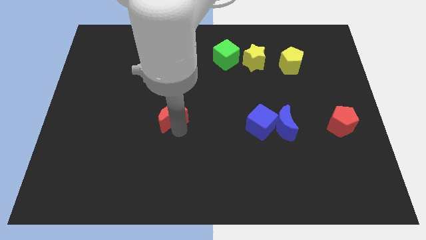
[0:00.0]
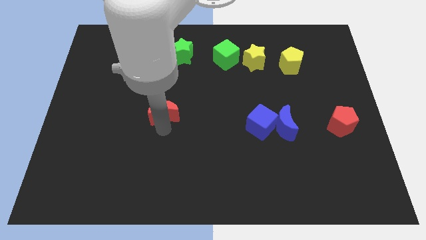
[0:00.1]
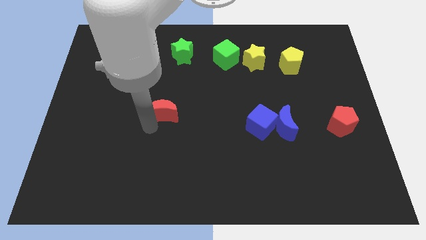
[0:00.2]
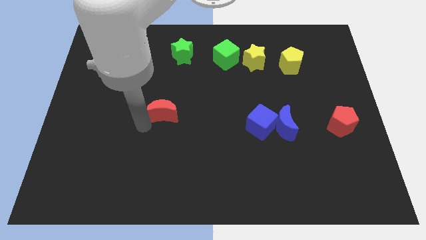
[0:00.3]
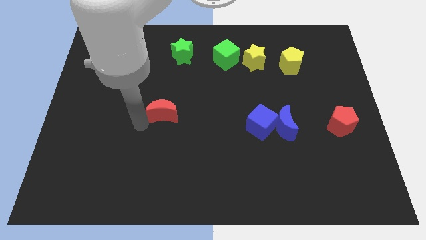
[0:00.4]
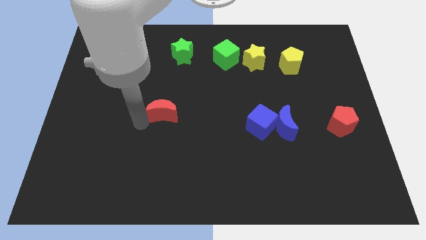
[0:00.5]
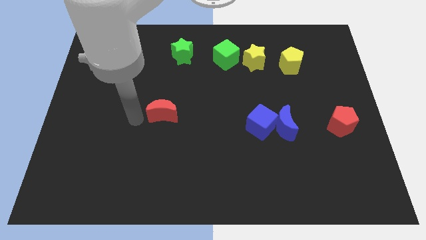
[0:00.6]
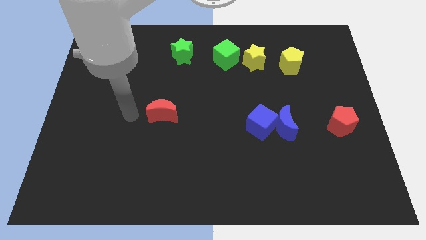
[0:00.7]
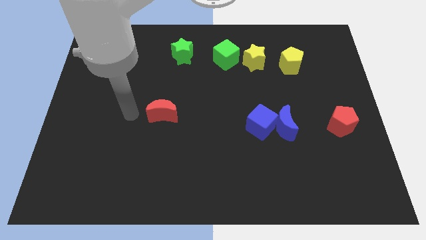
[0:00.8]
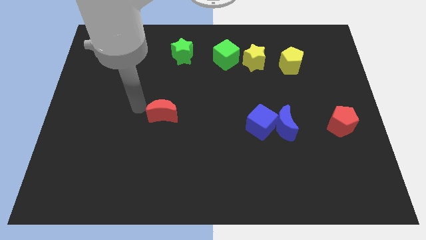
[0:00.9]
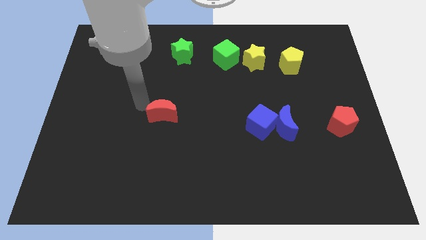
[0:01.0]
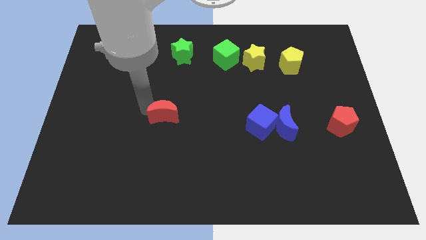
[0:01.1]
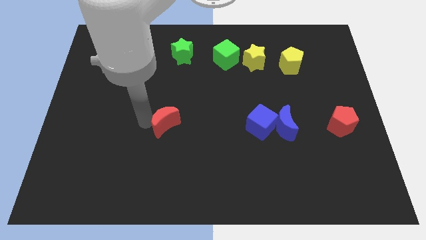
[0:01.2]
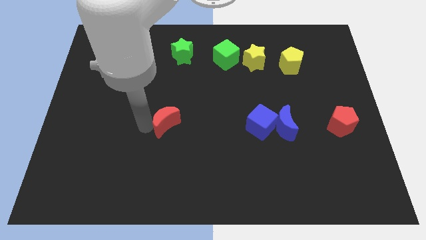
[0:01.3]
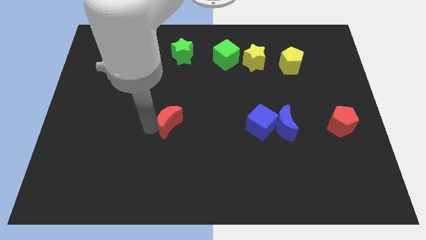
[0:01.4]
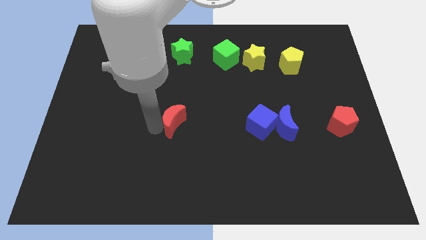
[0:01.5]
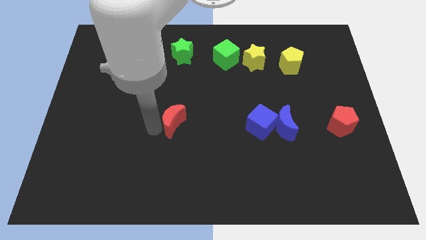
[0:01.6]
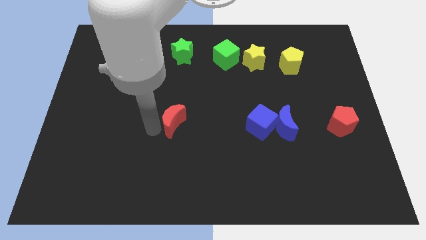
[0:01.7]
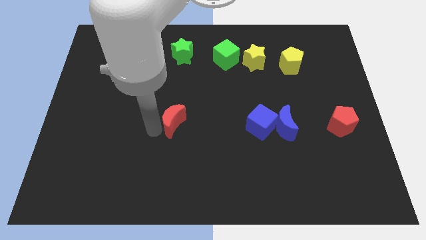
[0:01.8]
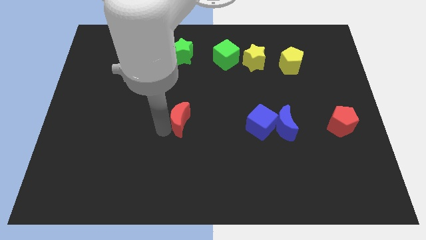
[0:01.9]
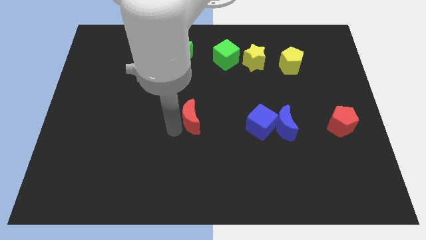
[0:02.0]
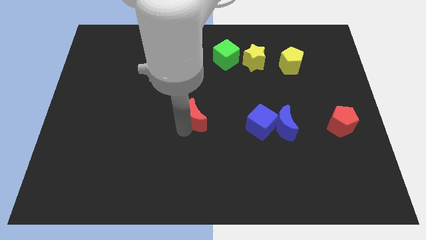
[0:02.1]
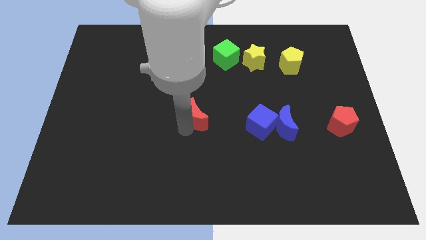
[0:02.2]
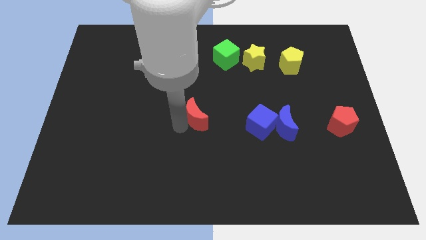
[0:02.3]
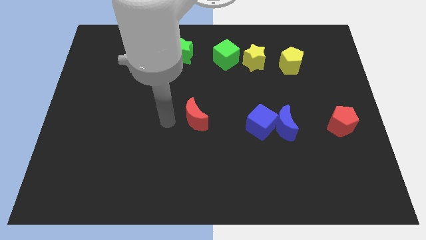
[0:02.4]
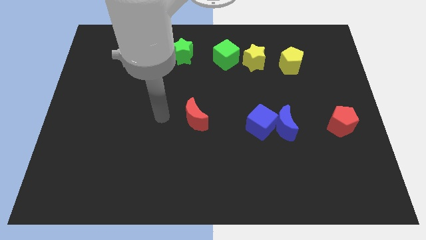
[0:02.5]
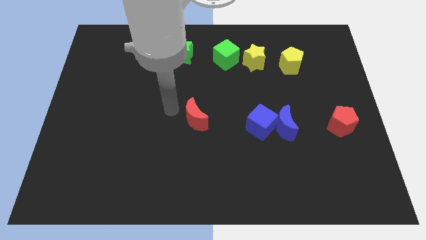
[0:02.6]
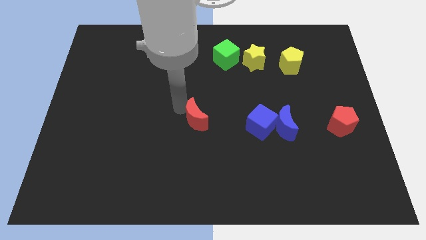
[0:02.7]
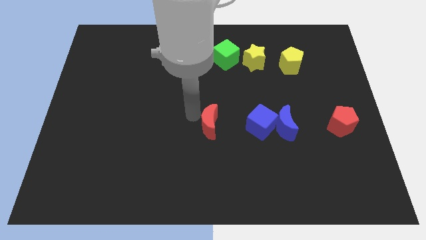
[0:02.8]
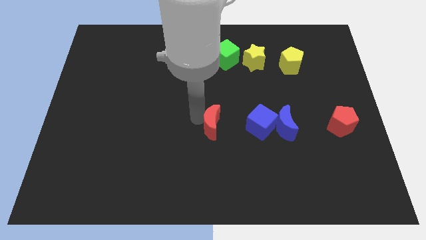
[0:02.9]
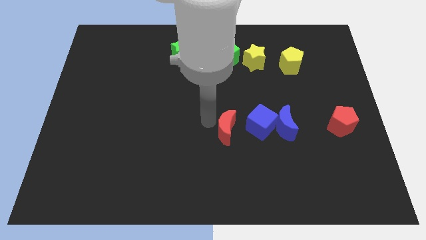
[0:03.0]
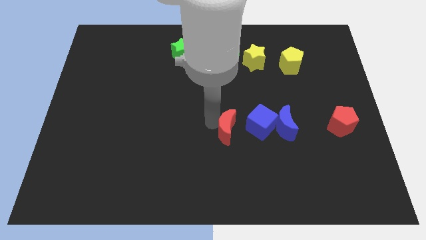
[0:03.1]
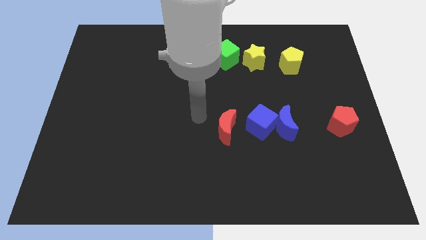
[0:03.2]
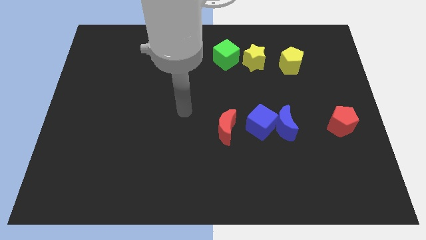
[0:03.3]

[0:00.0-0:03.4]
push the red moon to the left side of the blue cube

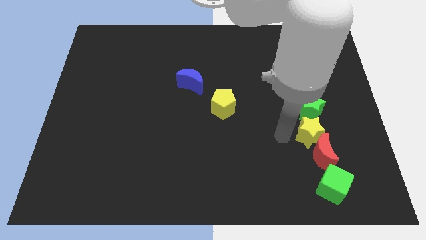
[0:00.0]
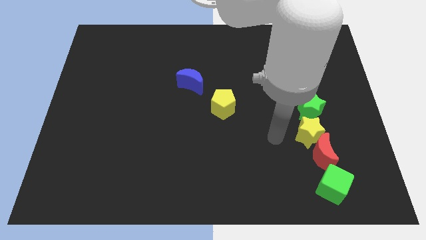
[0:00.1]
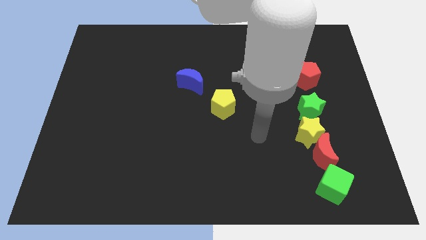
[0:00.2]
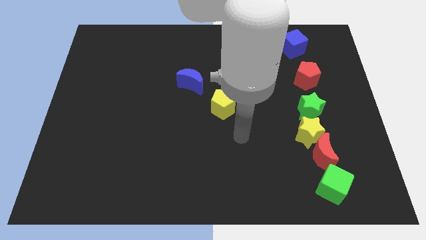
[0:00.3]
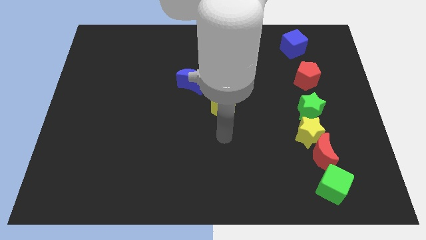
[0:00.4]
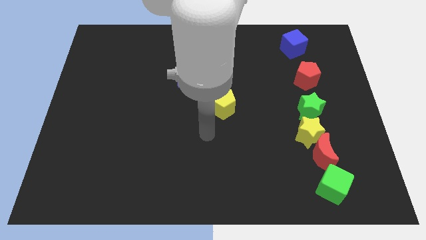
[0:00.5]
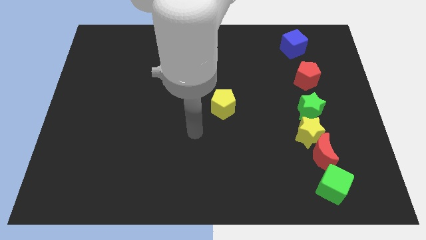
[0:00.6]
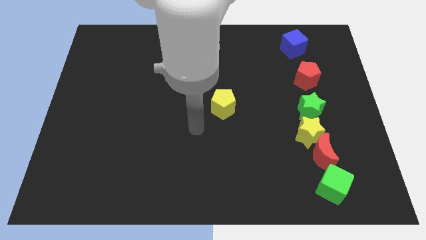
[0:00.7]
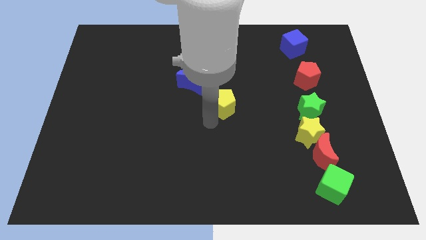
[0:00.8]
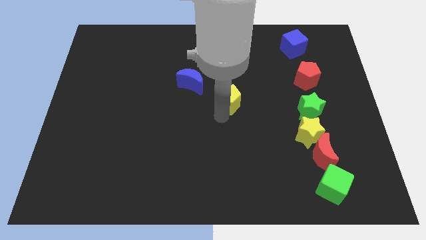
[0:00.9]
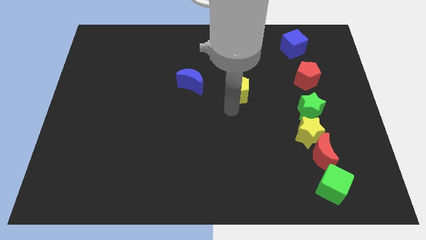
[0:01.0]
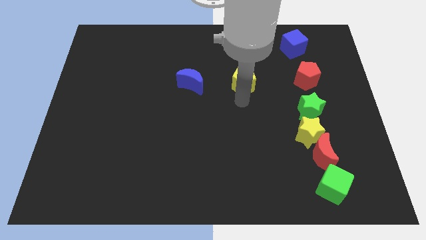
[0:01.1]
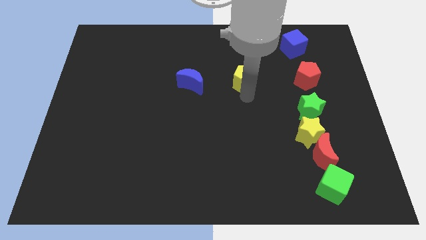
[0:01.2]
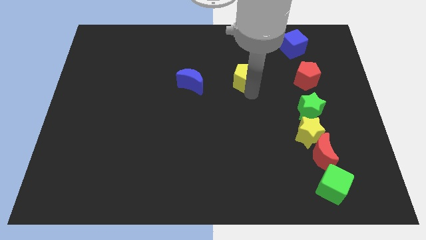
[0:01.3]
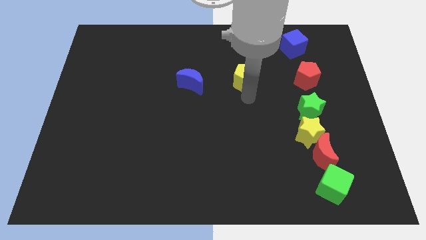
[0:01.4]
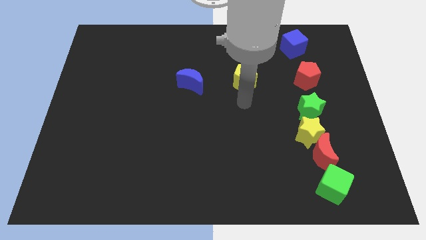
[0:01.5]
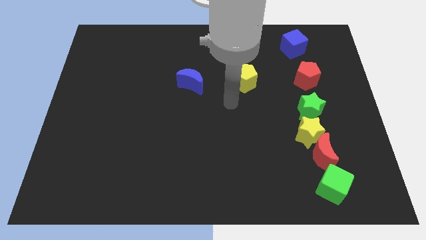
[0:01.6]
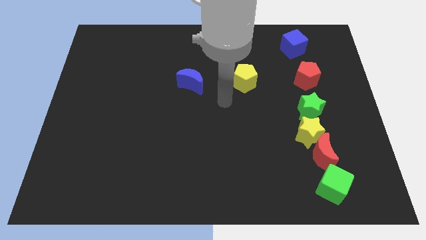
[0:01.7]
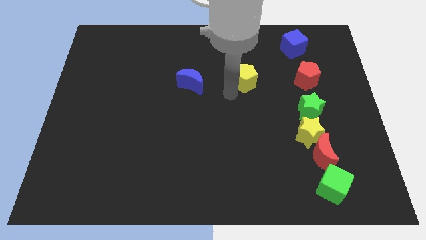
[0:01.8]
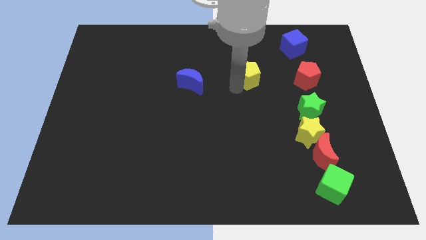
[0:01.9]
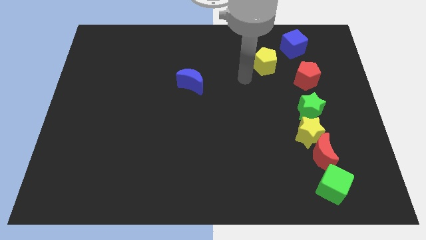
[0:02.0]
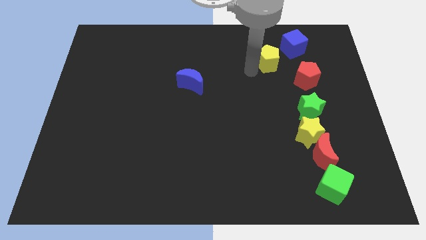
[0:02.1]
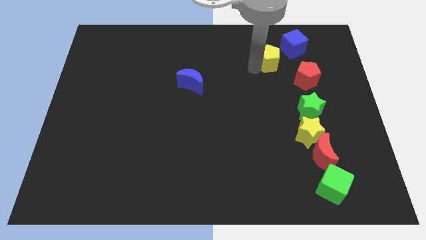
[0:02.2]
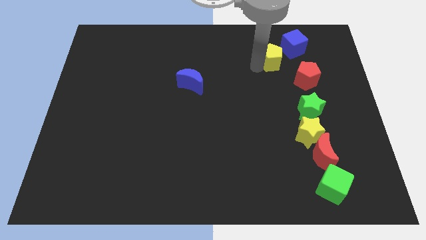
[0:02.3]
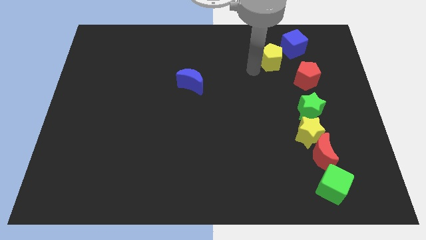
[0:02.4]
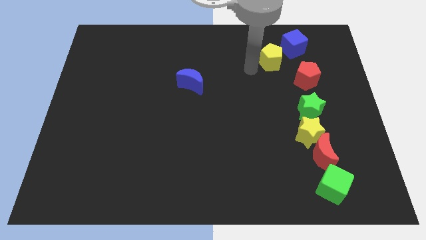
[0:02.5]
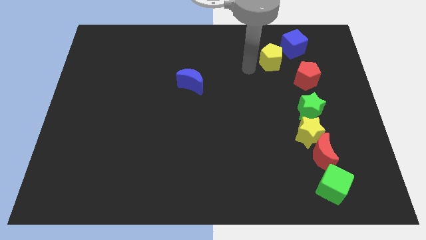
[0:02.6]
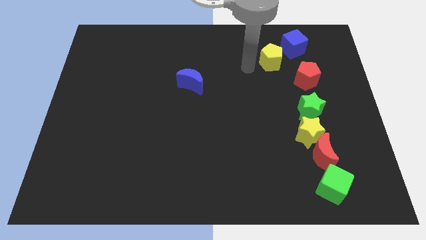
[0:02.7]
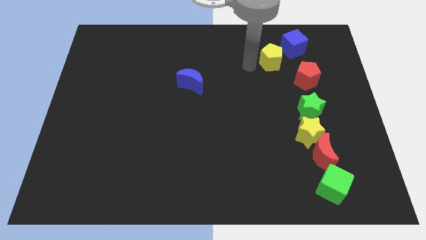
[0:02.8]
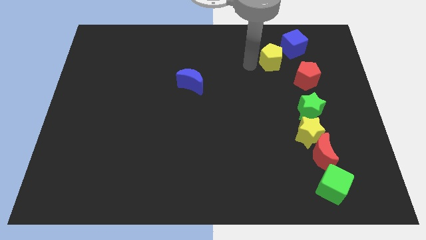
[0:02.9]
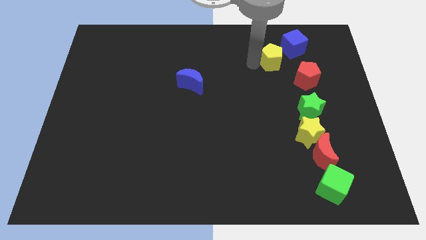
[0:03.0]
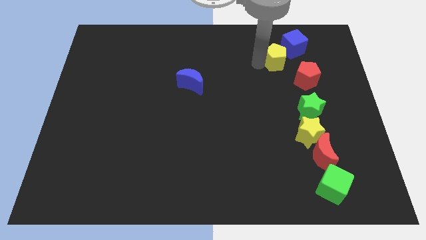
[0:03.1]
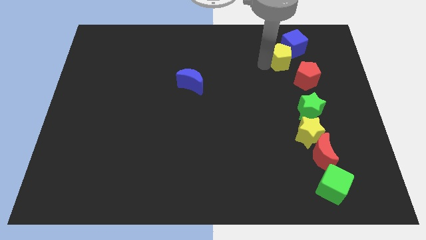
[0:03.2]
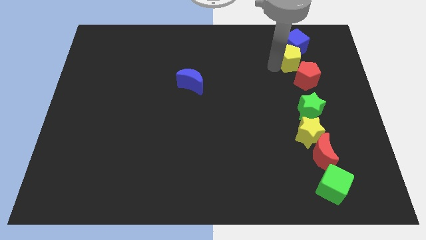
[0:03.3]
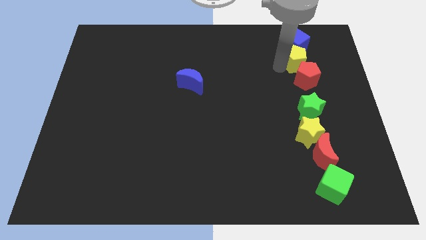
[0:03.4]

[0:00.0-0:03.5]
move yellow pentagon into blue cube

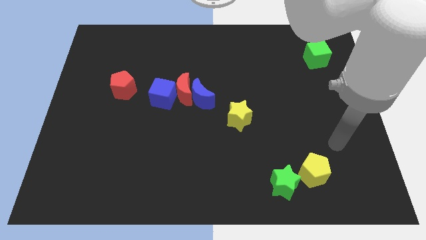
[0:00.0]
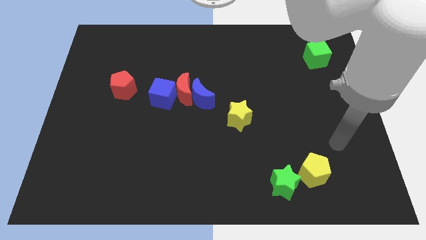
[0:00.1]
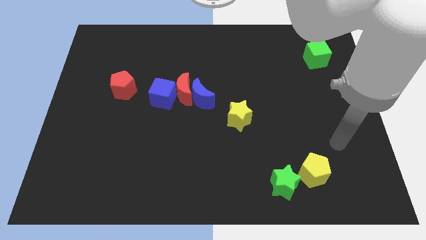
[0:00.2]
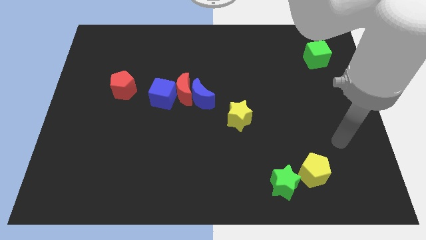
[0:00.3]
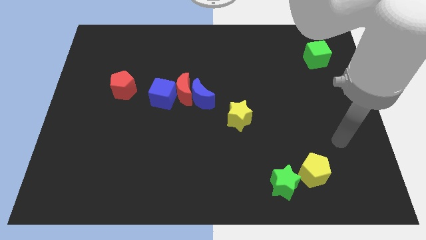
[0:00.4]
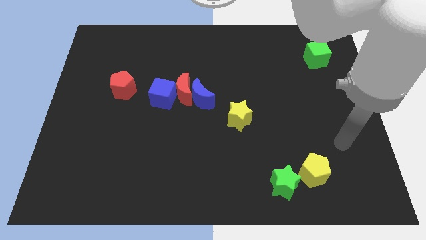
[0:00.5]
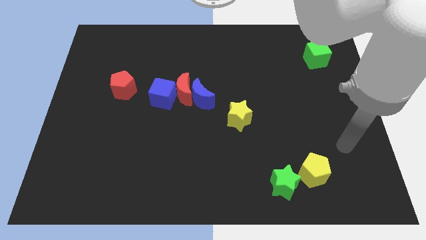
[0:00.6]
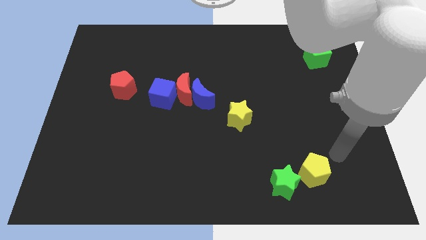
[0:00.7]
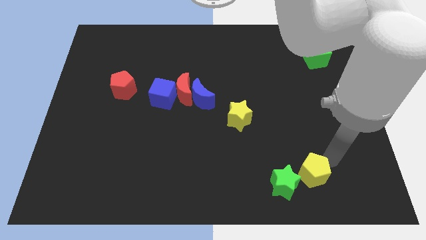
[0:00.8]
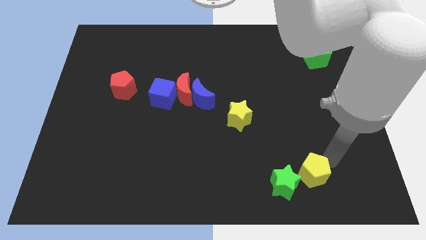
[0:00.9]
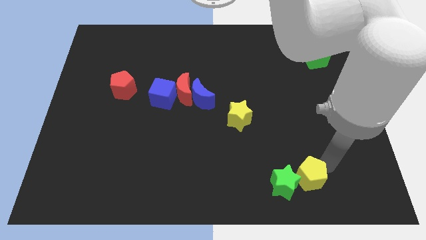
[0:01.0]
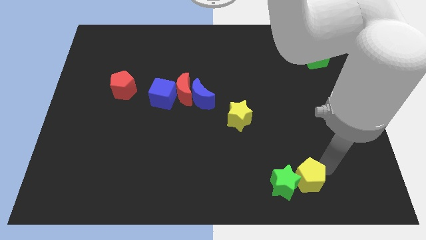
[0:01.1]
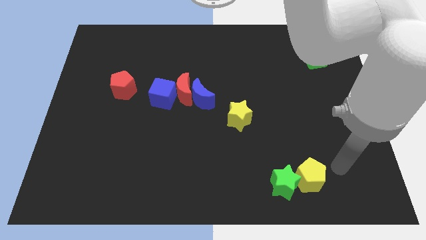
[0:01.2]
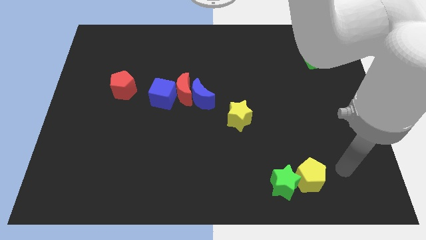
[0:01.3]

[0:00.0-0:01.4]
place yellow pentagon to the right side of green star

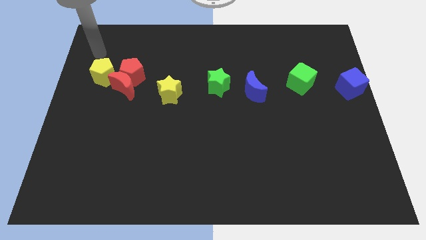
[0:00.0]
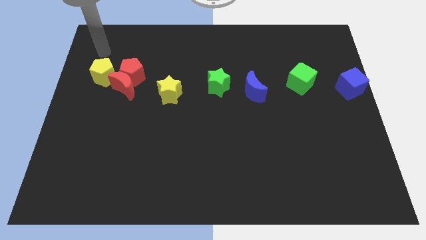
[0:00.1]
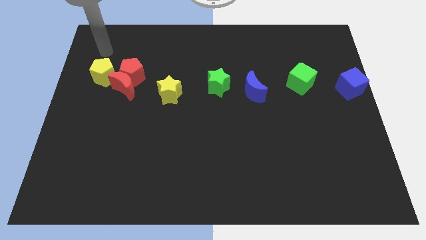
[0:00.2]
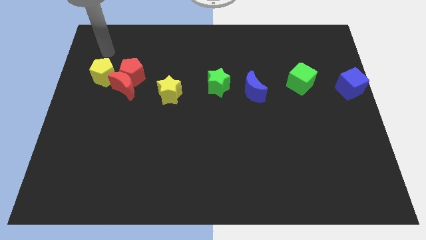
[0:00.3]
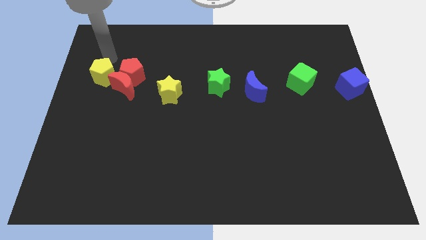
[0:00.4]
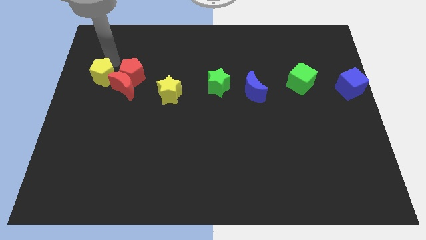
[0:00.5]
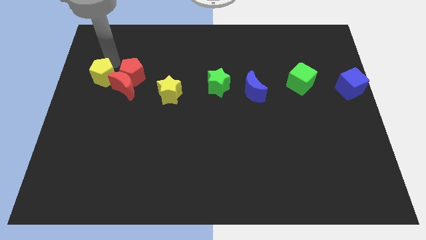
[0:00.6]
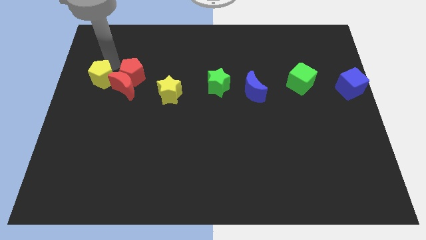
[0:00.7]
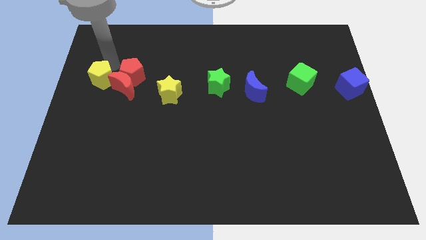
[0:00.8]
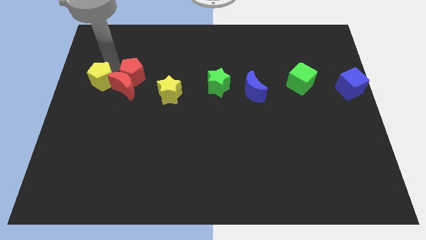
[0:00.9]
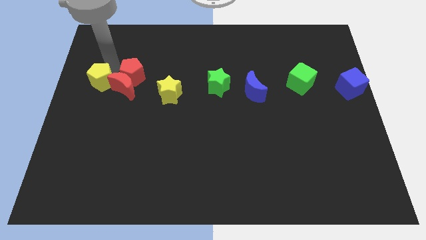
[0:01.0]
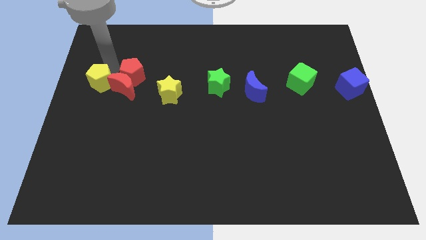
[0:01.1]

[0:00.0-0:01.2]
push the yellow pentagon slightly into the red crescent
